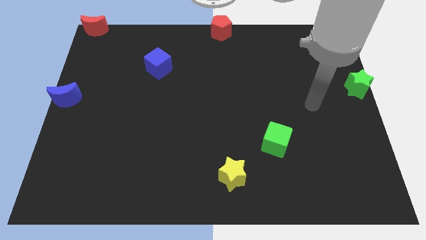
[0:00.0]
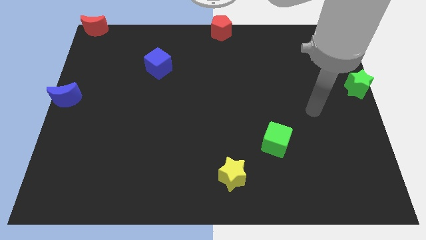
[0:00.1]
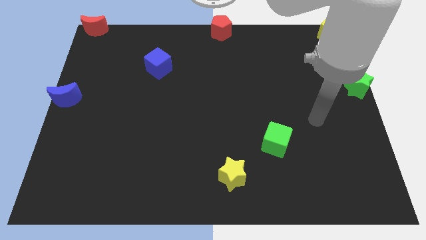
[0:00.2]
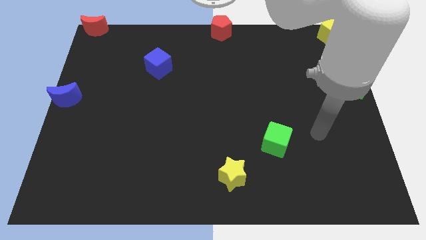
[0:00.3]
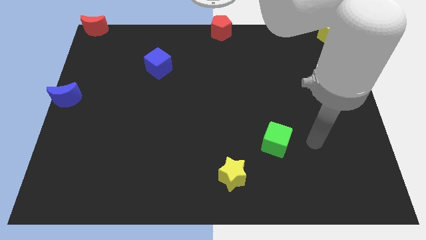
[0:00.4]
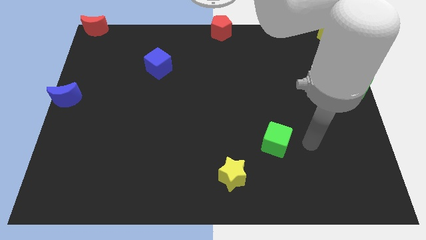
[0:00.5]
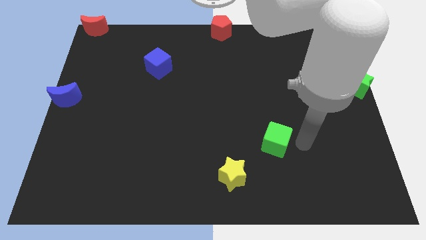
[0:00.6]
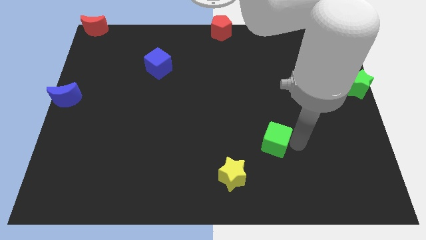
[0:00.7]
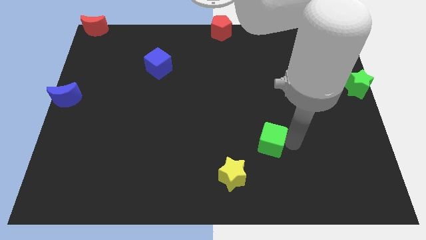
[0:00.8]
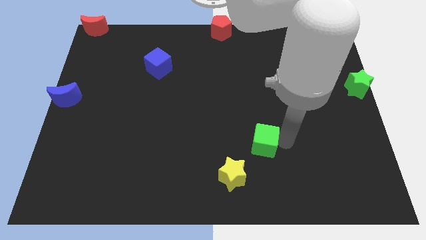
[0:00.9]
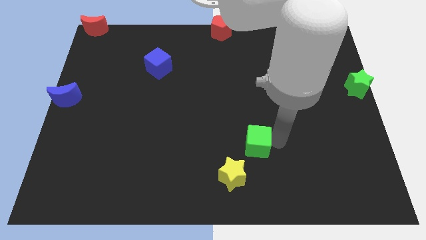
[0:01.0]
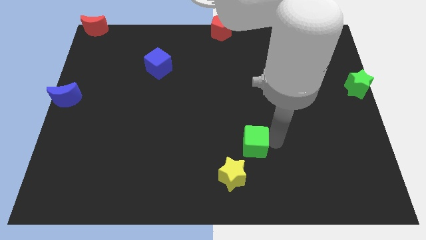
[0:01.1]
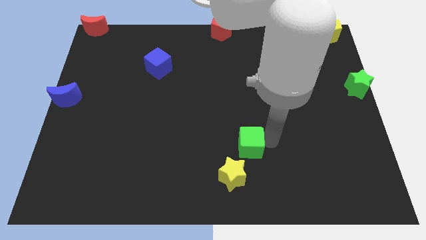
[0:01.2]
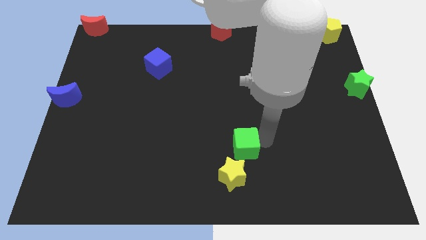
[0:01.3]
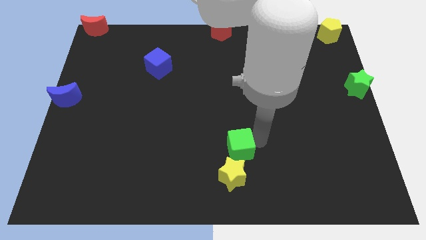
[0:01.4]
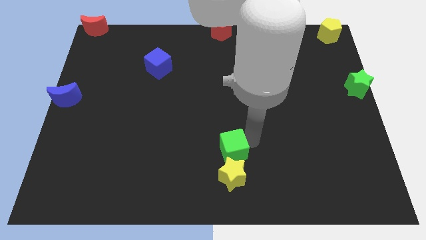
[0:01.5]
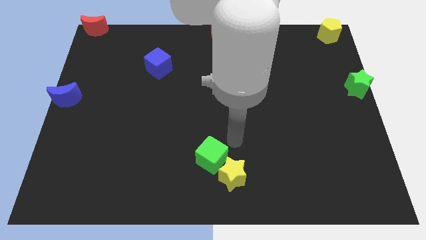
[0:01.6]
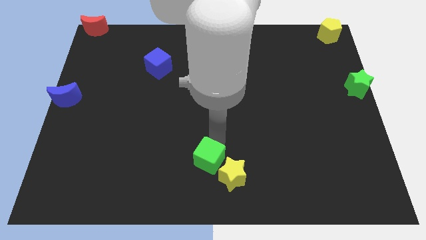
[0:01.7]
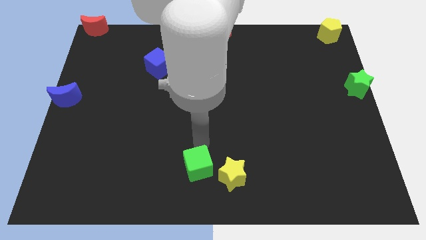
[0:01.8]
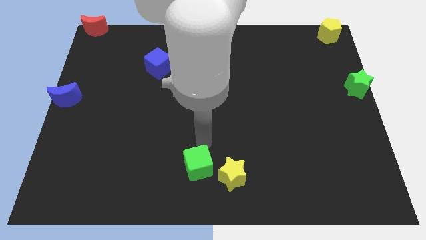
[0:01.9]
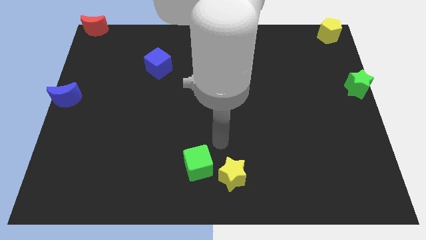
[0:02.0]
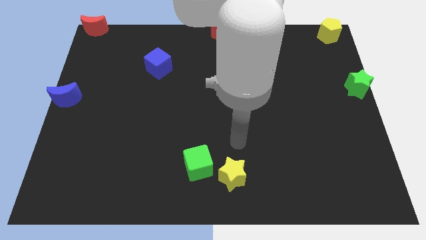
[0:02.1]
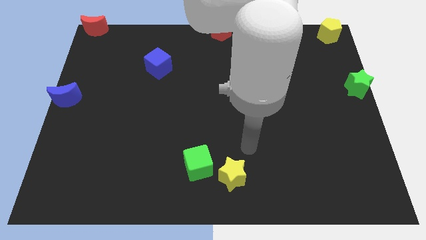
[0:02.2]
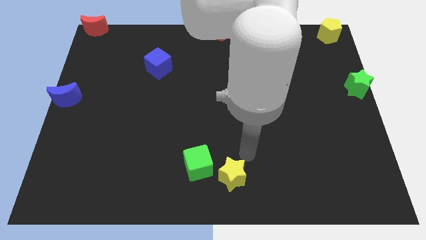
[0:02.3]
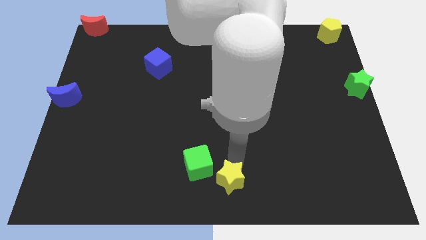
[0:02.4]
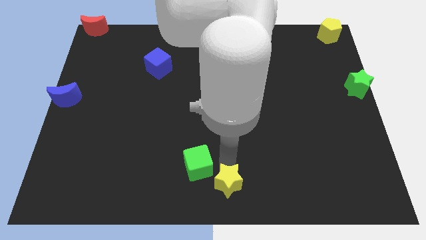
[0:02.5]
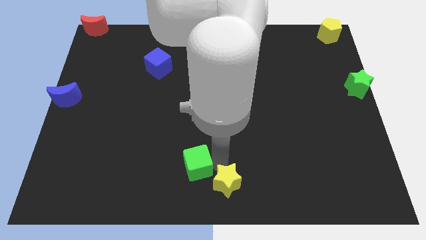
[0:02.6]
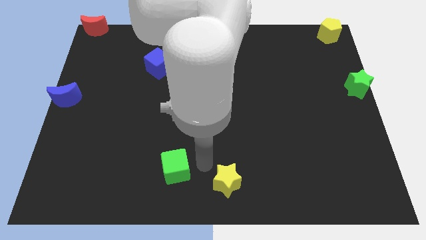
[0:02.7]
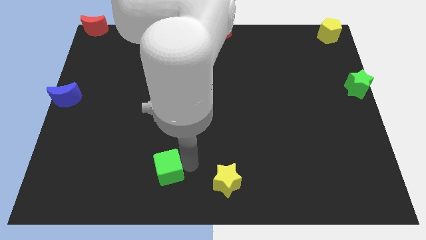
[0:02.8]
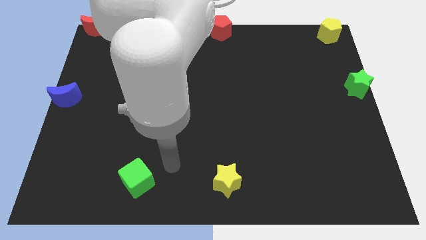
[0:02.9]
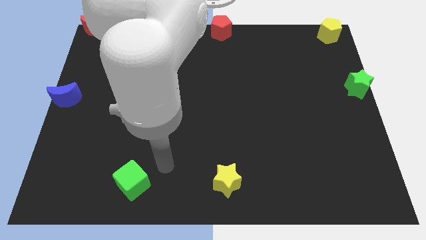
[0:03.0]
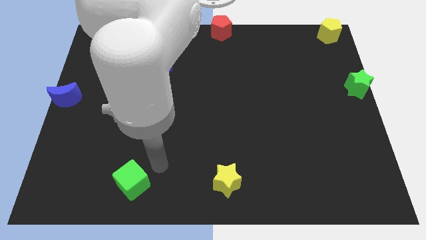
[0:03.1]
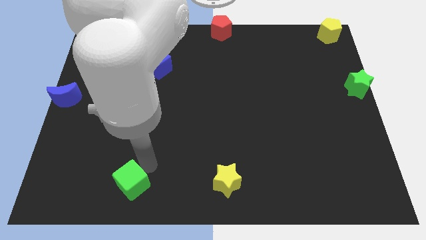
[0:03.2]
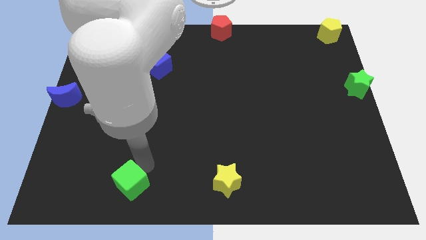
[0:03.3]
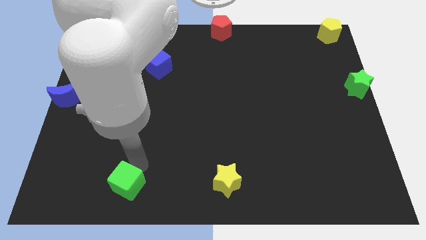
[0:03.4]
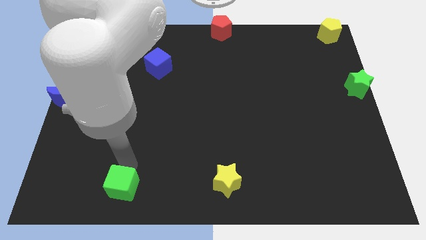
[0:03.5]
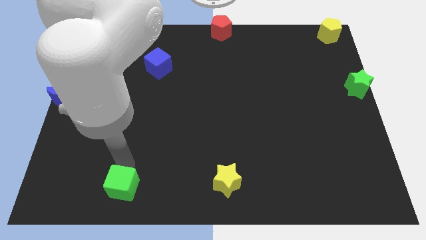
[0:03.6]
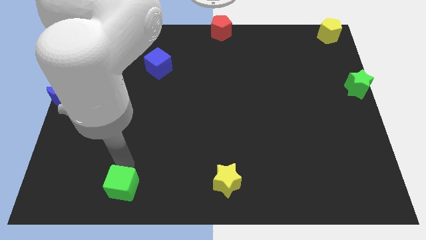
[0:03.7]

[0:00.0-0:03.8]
move the green cube to the bottom left side of the board

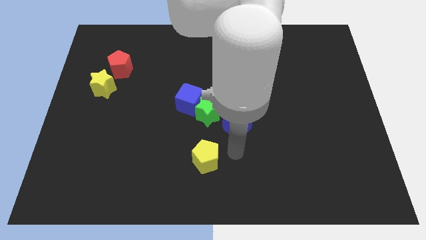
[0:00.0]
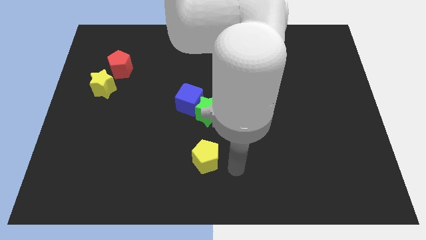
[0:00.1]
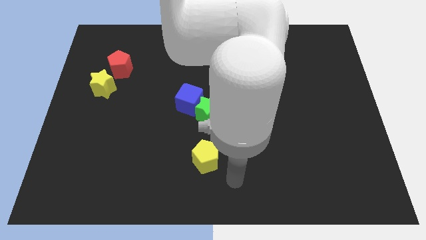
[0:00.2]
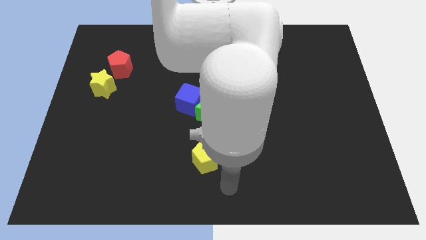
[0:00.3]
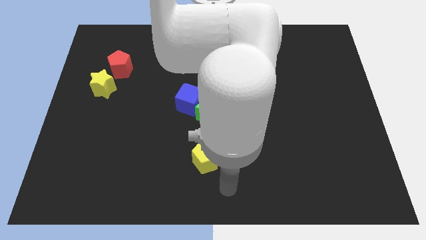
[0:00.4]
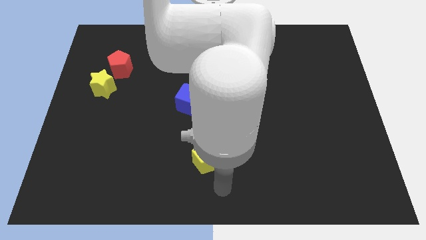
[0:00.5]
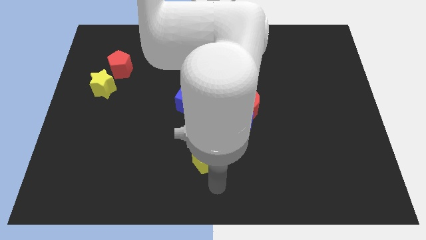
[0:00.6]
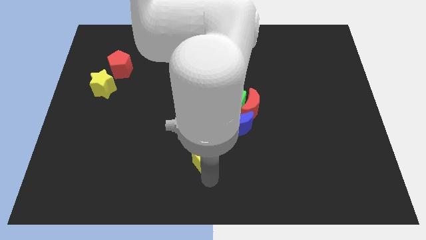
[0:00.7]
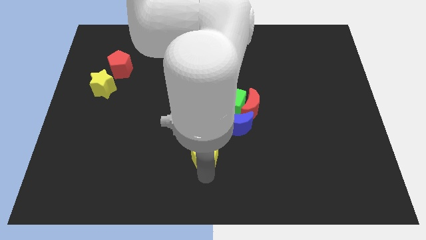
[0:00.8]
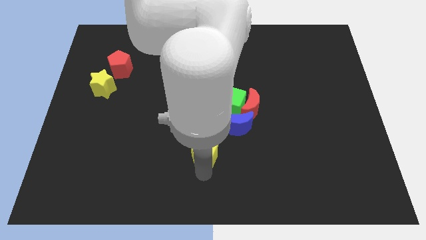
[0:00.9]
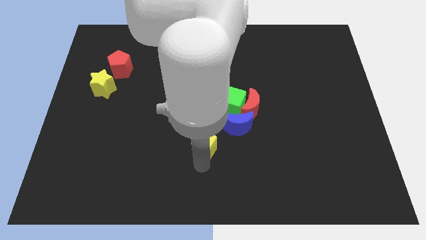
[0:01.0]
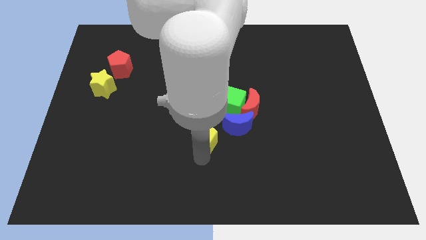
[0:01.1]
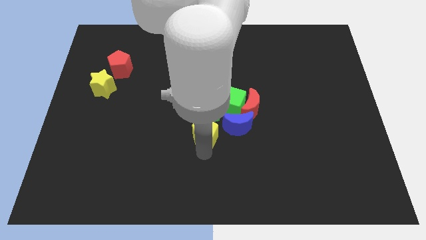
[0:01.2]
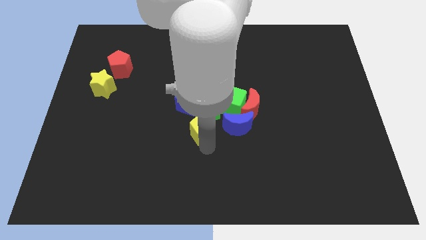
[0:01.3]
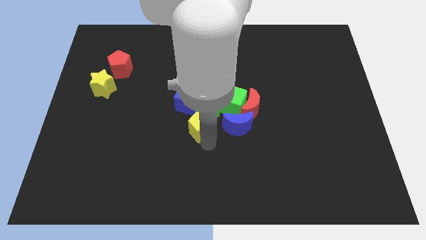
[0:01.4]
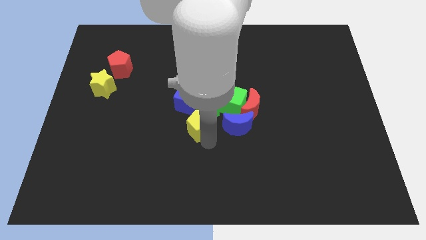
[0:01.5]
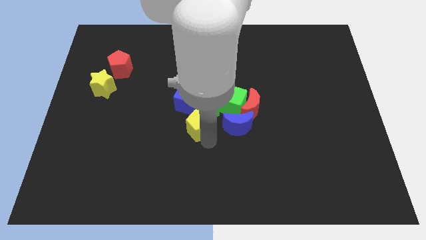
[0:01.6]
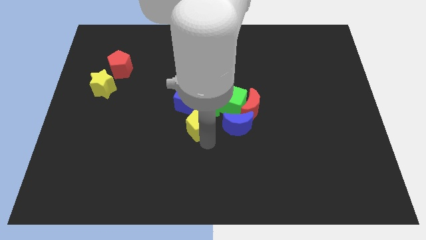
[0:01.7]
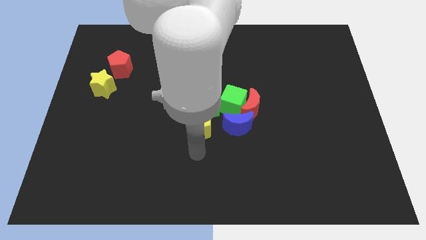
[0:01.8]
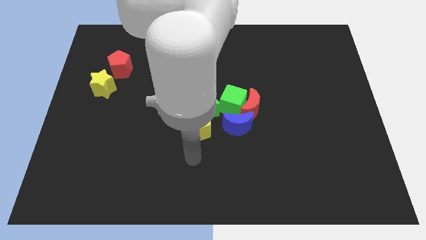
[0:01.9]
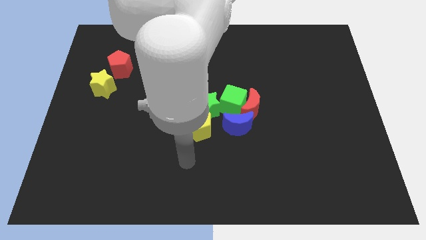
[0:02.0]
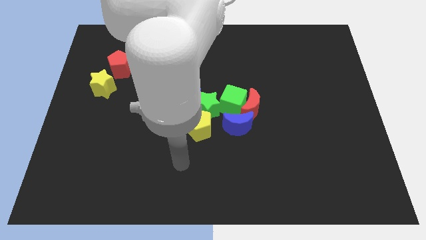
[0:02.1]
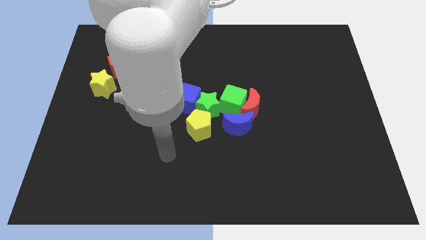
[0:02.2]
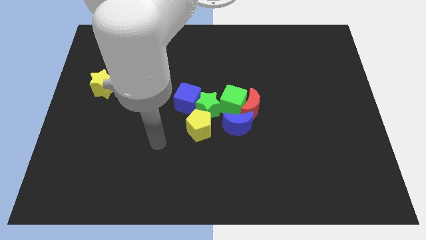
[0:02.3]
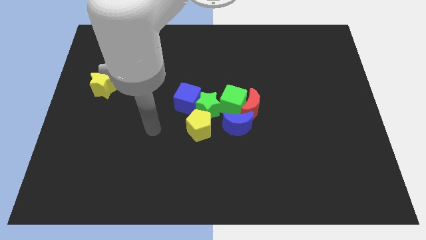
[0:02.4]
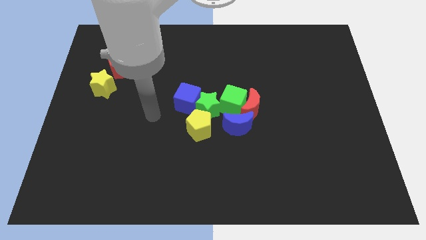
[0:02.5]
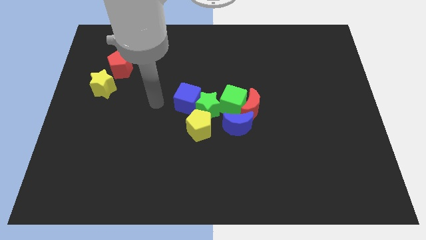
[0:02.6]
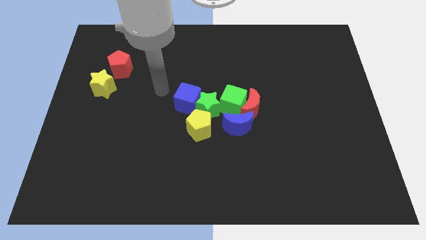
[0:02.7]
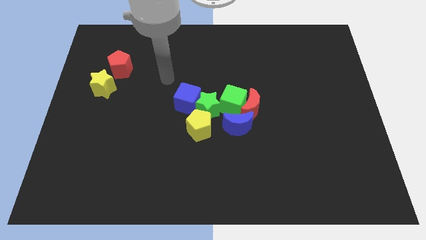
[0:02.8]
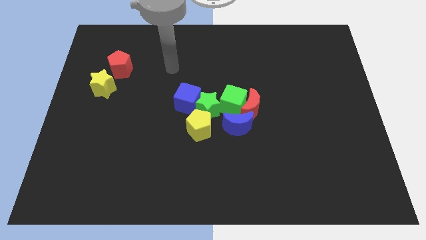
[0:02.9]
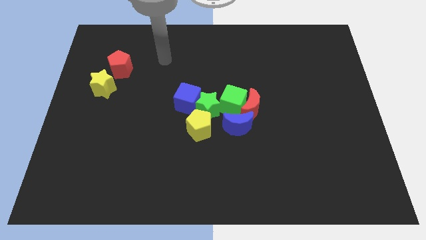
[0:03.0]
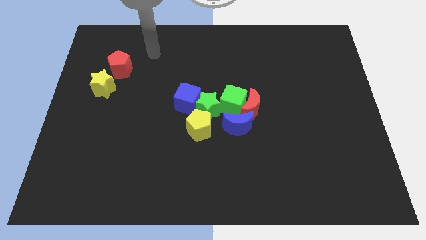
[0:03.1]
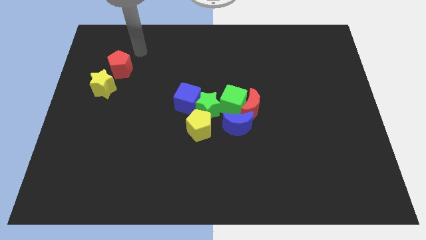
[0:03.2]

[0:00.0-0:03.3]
place the yellow pentagon close to the green star

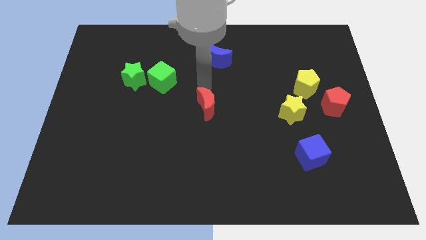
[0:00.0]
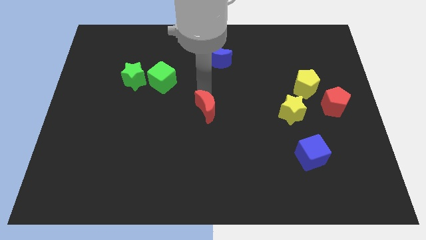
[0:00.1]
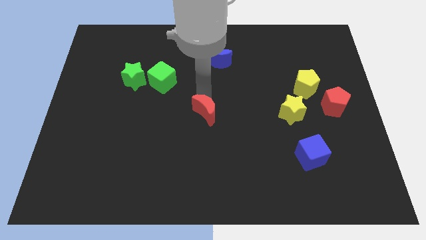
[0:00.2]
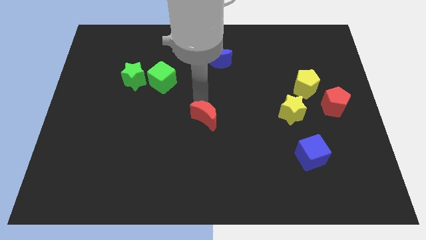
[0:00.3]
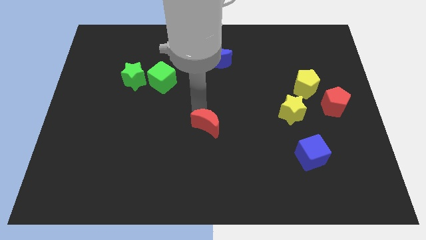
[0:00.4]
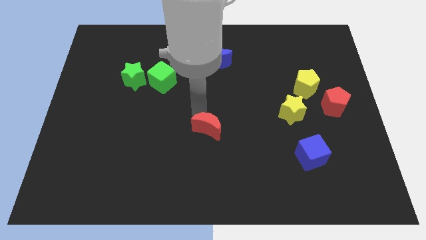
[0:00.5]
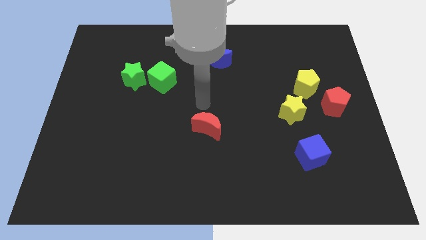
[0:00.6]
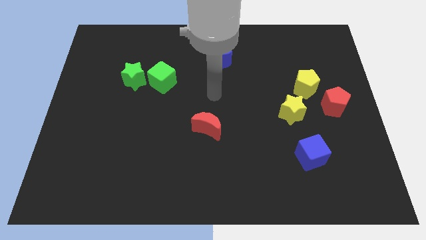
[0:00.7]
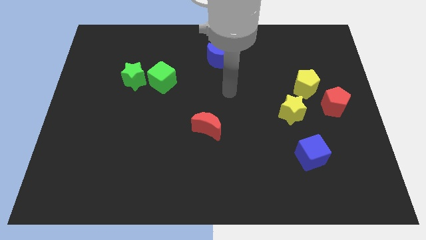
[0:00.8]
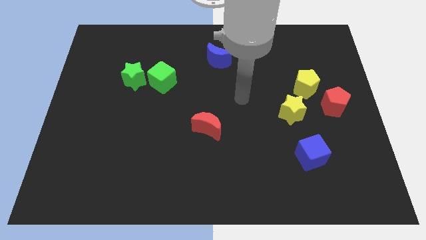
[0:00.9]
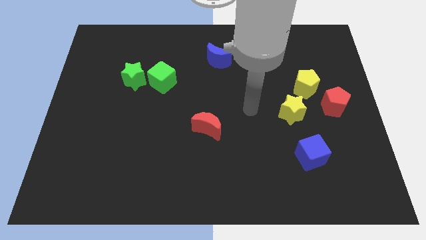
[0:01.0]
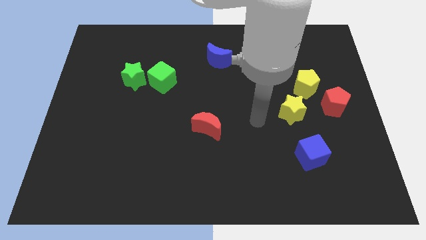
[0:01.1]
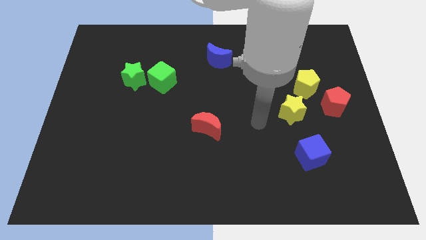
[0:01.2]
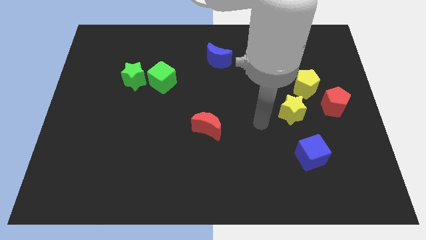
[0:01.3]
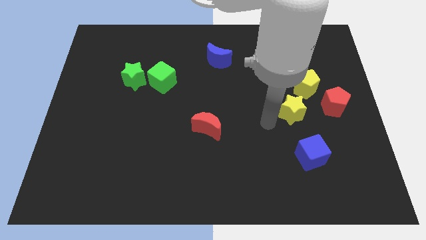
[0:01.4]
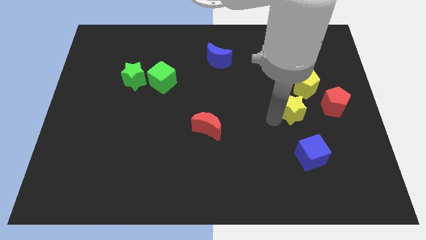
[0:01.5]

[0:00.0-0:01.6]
place the red crescent in center of board
